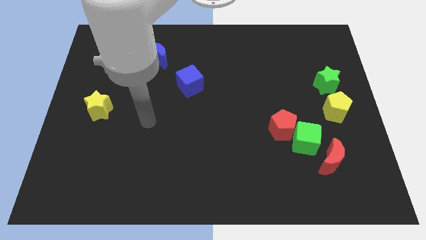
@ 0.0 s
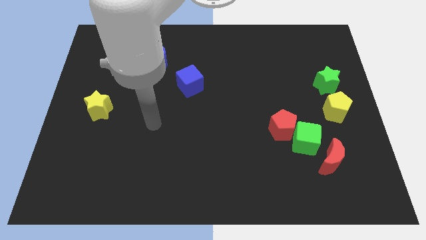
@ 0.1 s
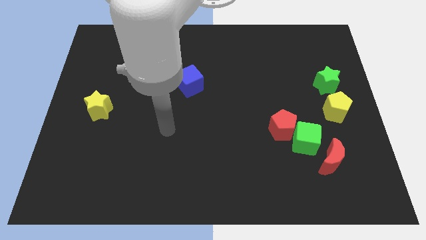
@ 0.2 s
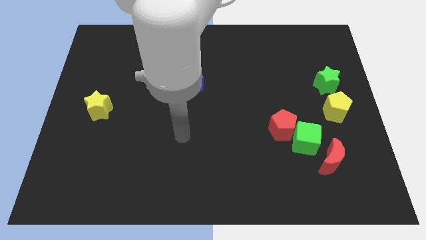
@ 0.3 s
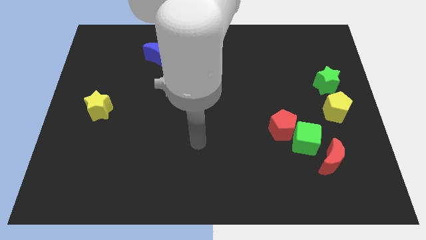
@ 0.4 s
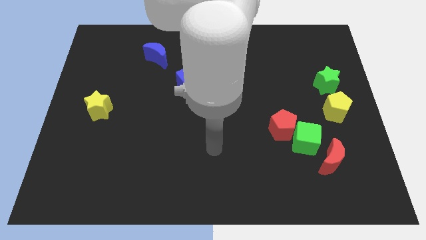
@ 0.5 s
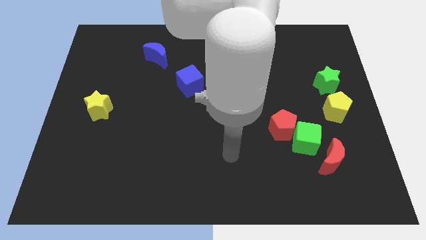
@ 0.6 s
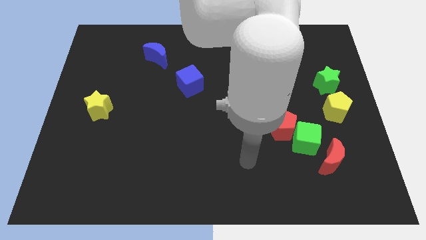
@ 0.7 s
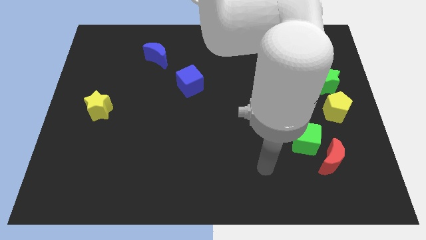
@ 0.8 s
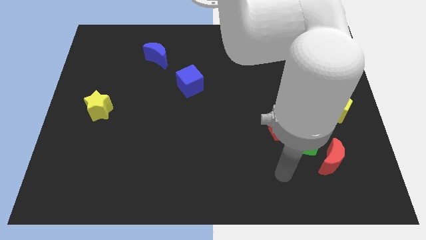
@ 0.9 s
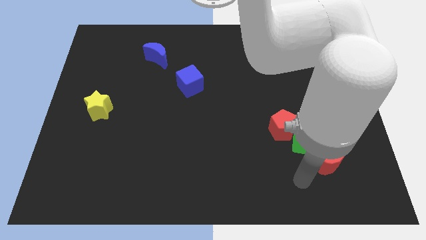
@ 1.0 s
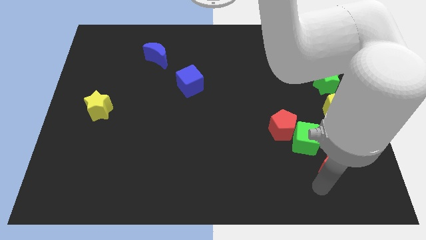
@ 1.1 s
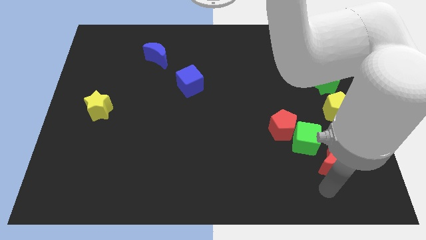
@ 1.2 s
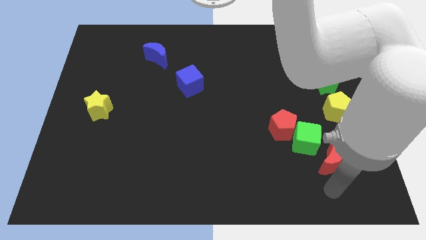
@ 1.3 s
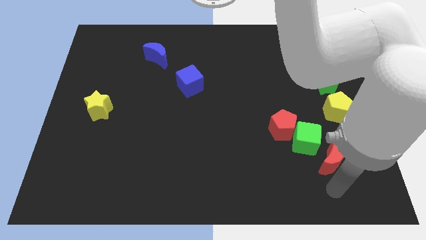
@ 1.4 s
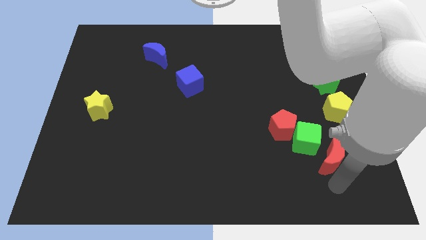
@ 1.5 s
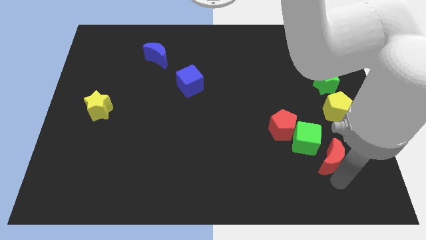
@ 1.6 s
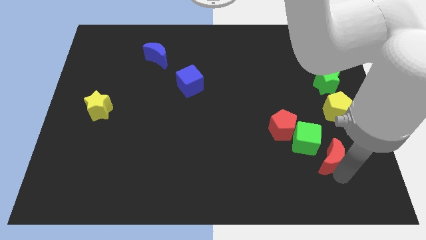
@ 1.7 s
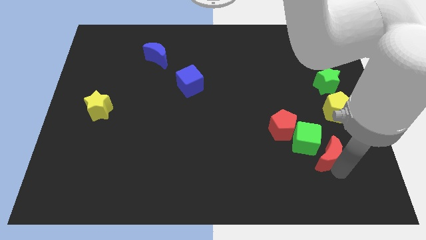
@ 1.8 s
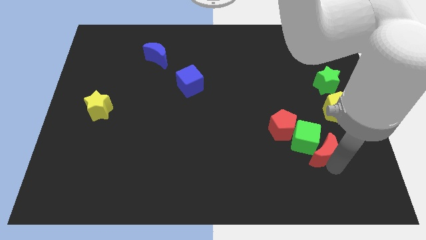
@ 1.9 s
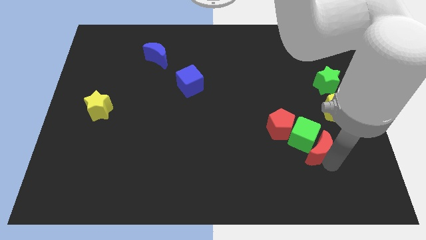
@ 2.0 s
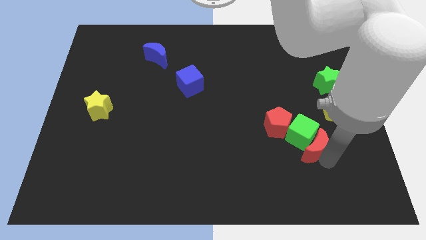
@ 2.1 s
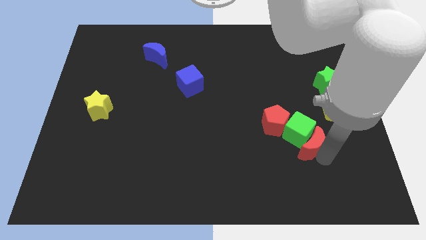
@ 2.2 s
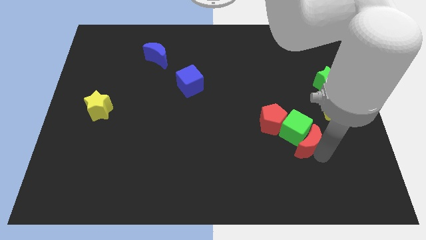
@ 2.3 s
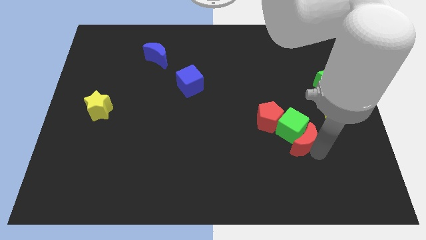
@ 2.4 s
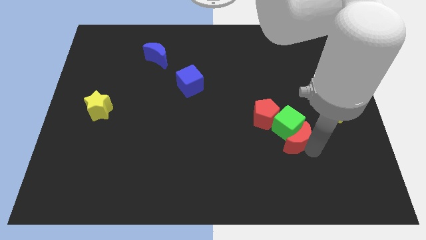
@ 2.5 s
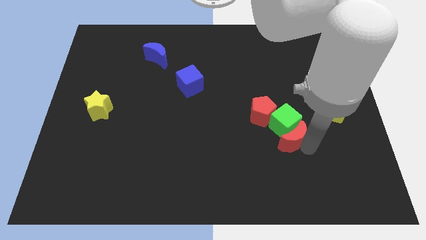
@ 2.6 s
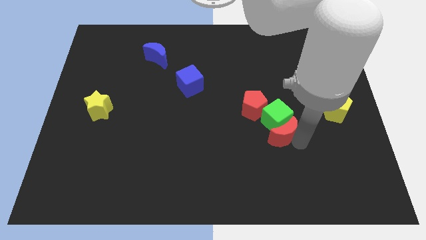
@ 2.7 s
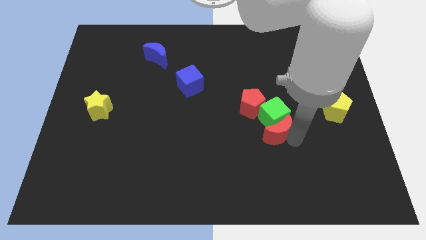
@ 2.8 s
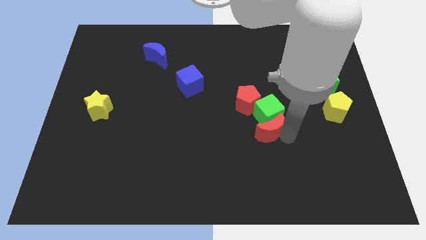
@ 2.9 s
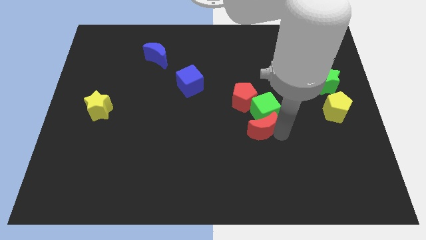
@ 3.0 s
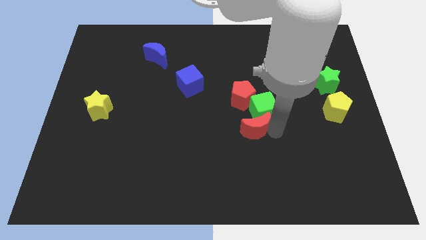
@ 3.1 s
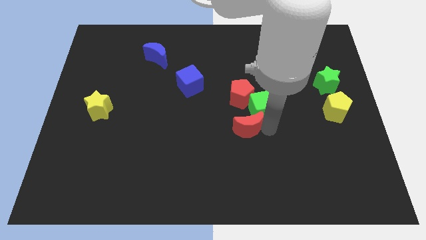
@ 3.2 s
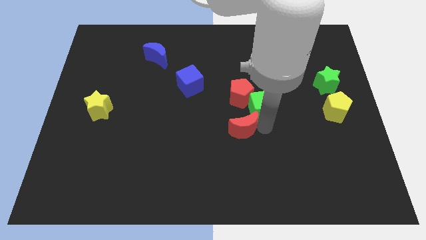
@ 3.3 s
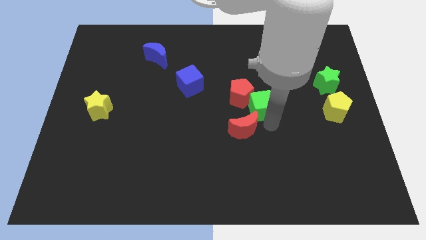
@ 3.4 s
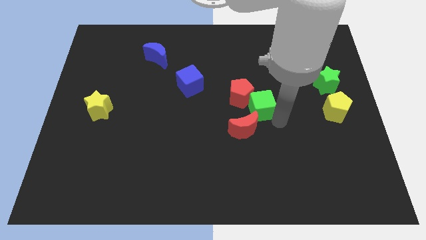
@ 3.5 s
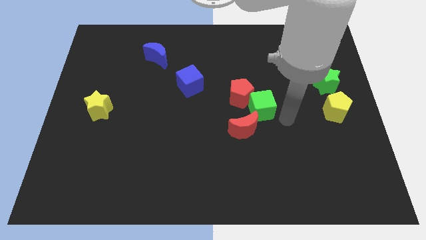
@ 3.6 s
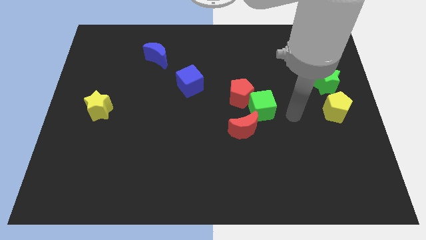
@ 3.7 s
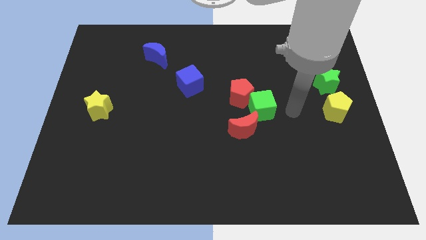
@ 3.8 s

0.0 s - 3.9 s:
push the green cube with red crescent towards center

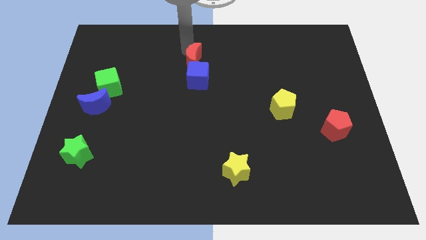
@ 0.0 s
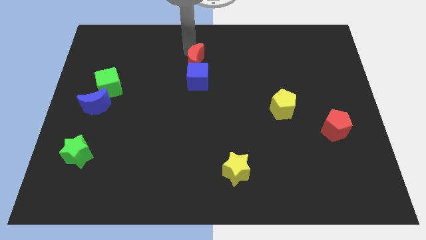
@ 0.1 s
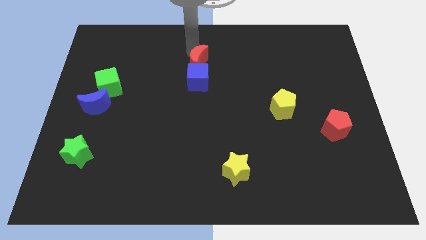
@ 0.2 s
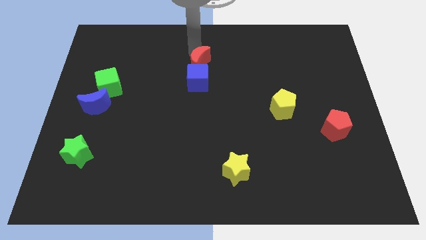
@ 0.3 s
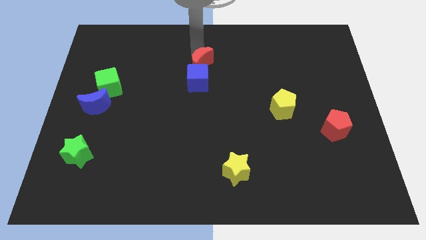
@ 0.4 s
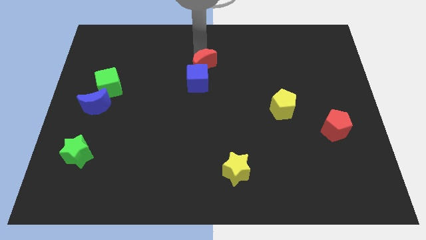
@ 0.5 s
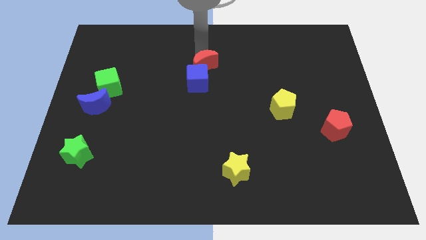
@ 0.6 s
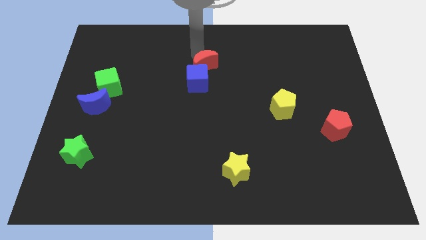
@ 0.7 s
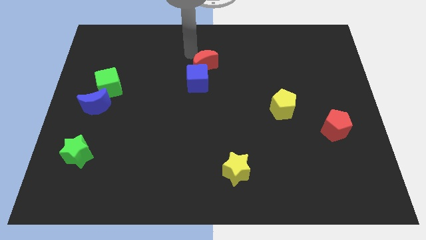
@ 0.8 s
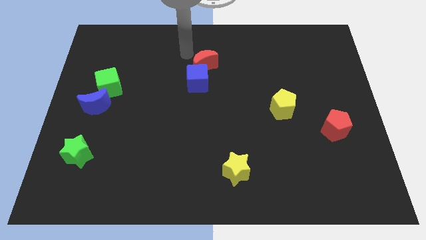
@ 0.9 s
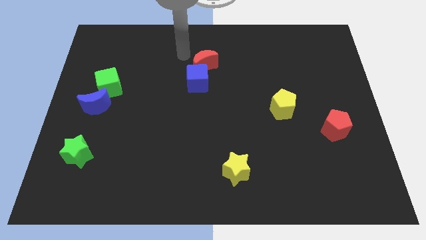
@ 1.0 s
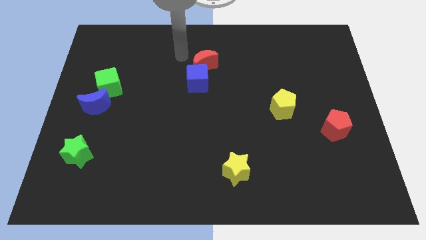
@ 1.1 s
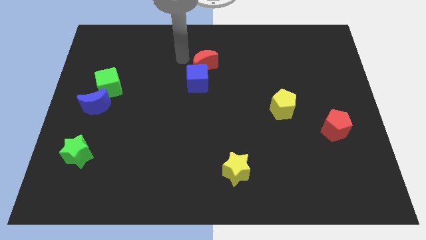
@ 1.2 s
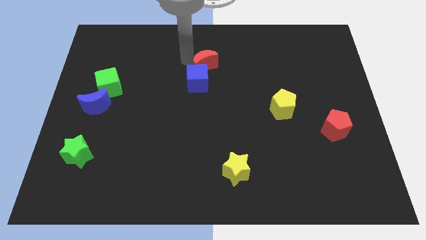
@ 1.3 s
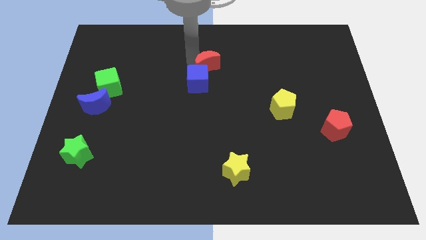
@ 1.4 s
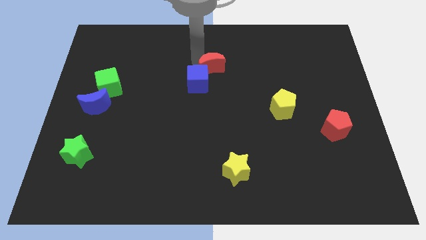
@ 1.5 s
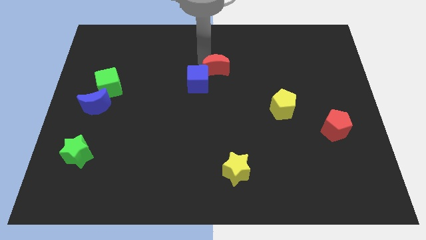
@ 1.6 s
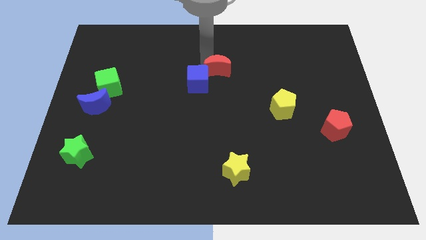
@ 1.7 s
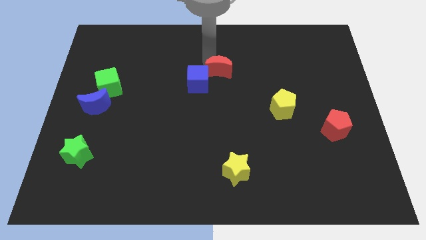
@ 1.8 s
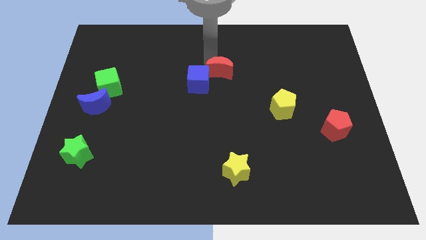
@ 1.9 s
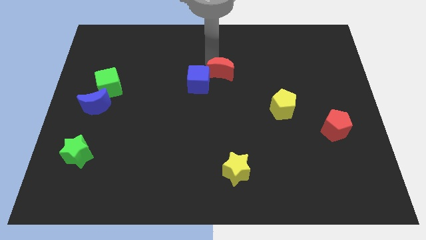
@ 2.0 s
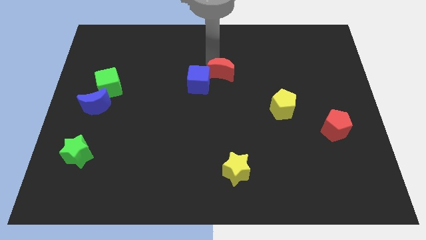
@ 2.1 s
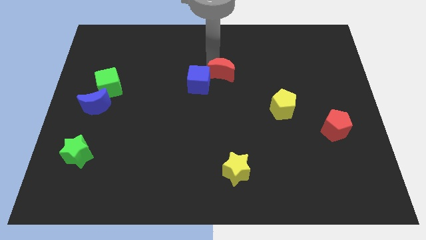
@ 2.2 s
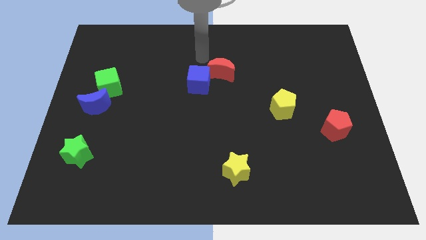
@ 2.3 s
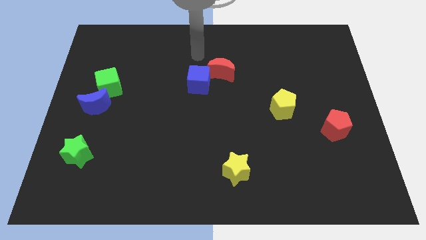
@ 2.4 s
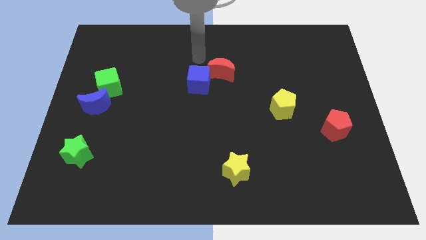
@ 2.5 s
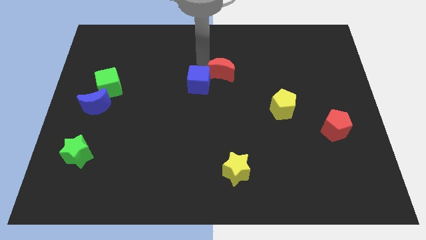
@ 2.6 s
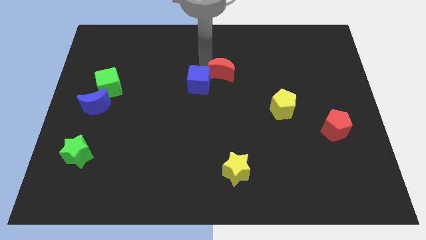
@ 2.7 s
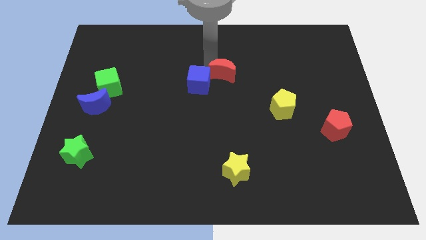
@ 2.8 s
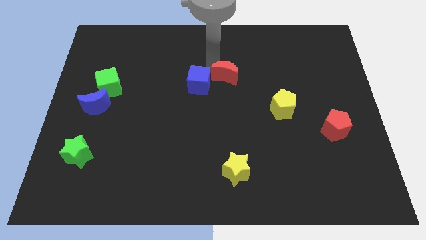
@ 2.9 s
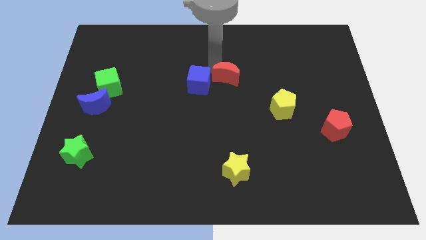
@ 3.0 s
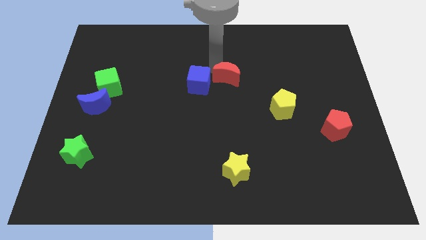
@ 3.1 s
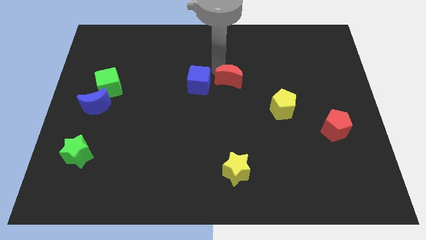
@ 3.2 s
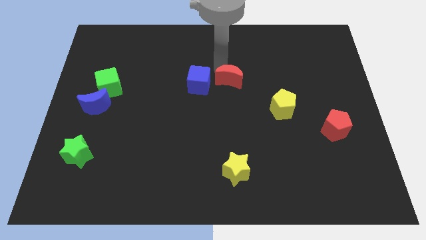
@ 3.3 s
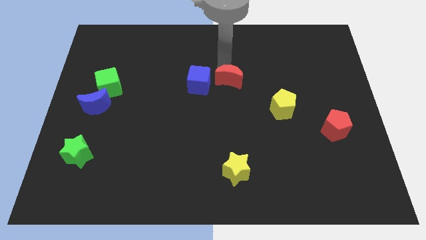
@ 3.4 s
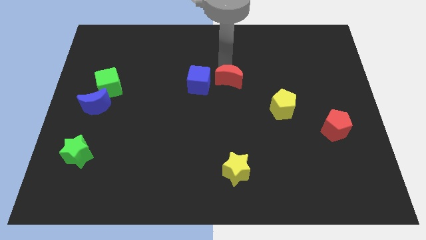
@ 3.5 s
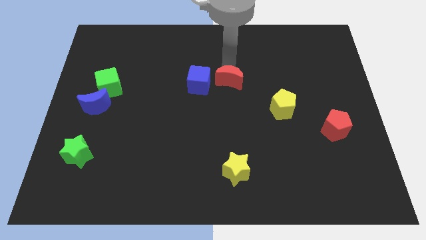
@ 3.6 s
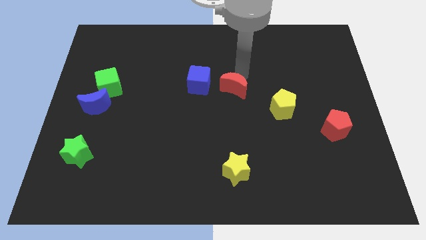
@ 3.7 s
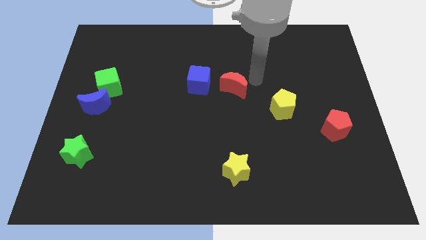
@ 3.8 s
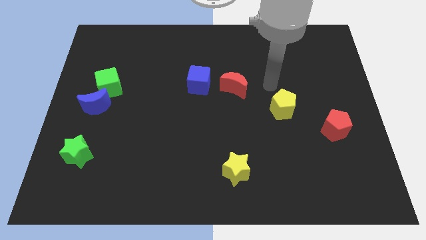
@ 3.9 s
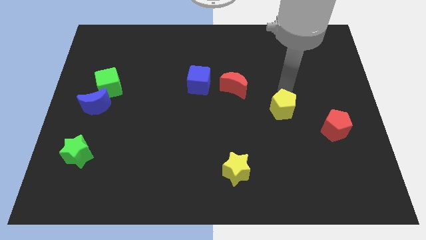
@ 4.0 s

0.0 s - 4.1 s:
push the red crescent to the right of the blue cube

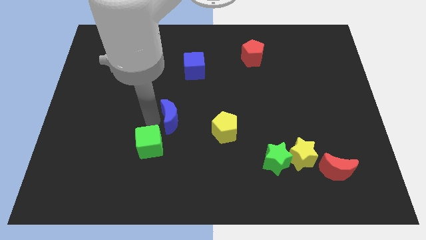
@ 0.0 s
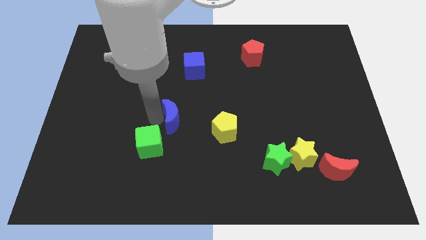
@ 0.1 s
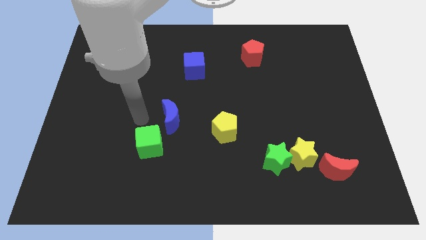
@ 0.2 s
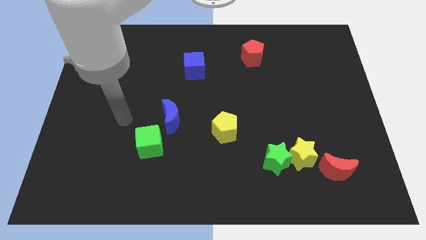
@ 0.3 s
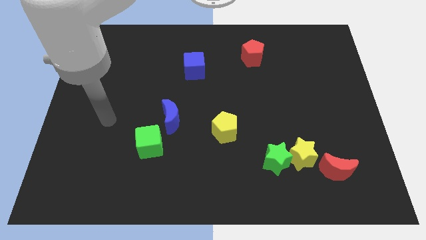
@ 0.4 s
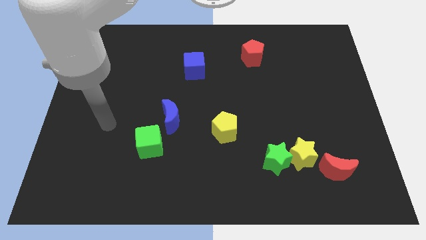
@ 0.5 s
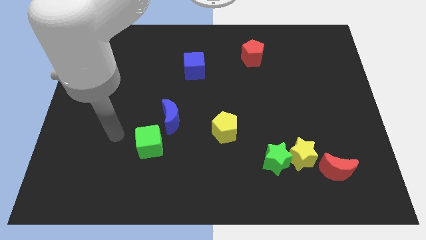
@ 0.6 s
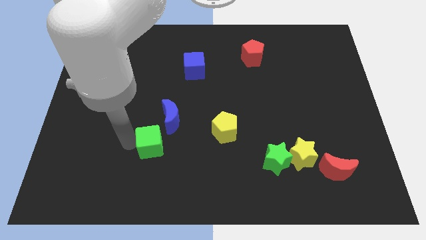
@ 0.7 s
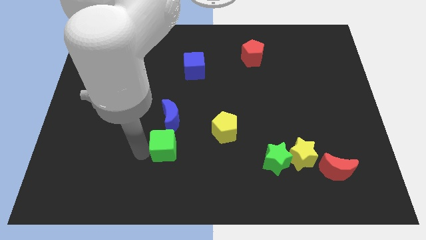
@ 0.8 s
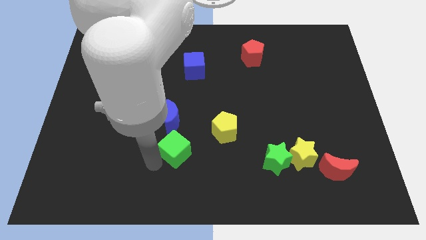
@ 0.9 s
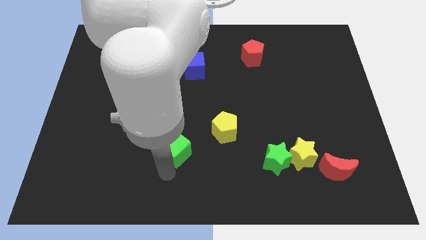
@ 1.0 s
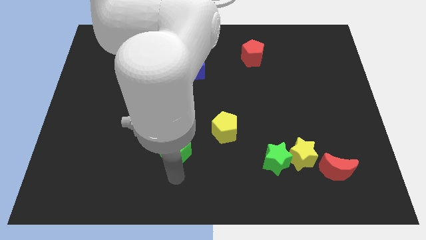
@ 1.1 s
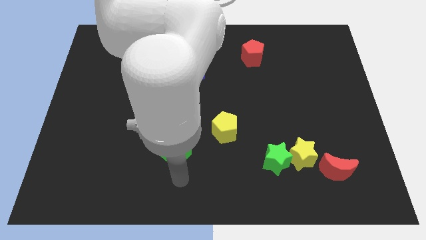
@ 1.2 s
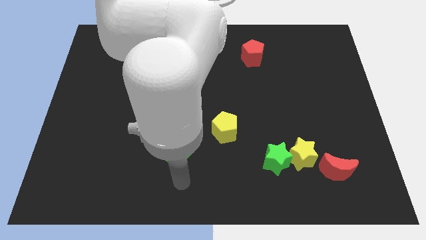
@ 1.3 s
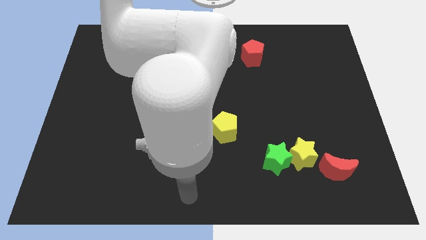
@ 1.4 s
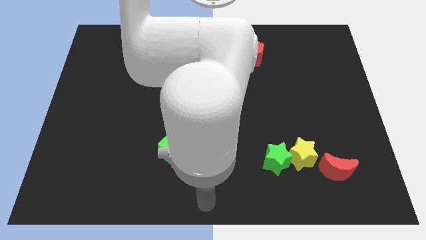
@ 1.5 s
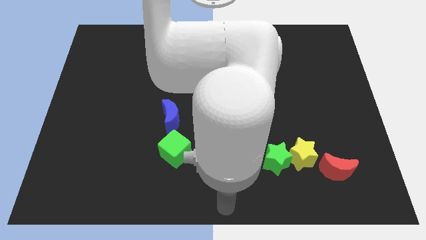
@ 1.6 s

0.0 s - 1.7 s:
place the green cube below the blue moon
